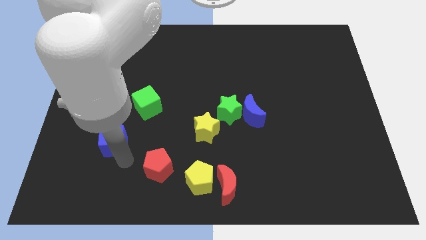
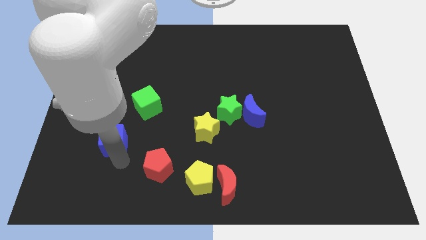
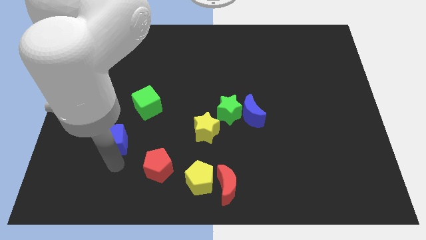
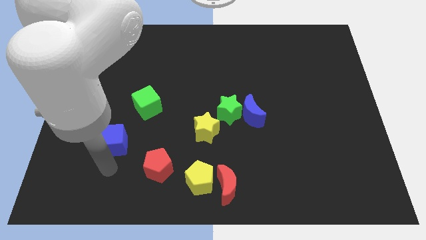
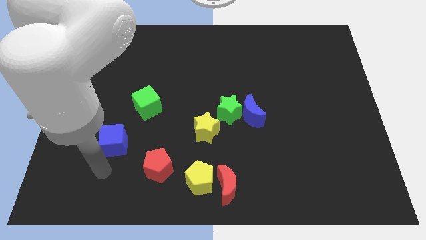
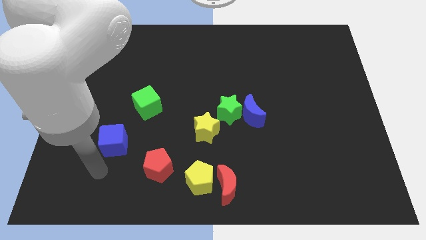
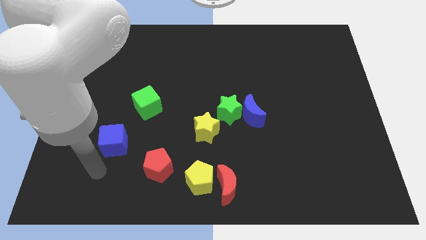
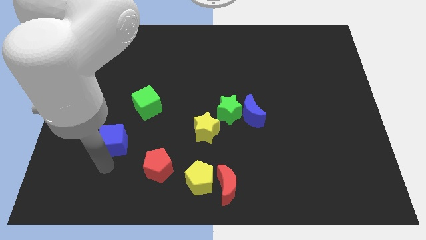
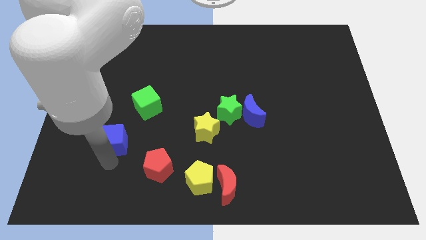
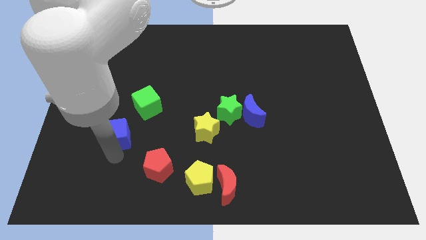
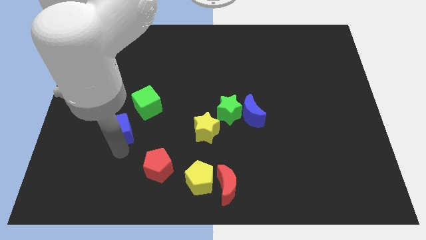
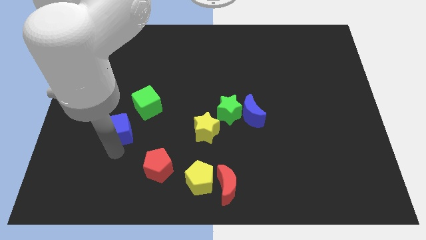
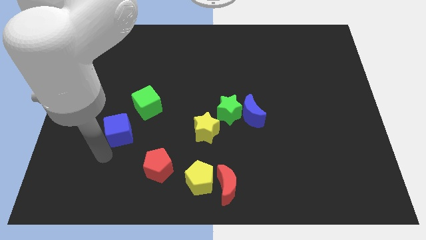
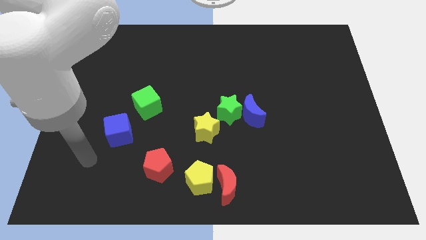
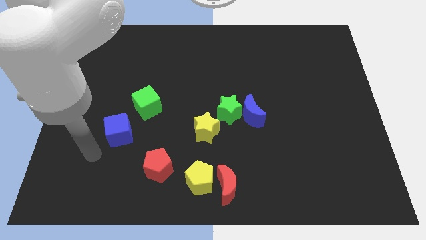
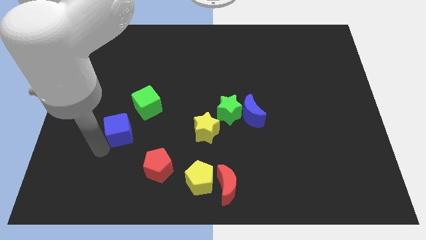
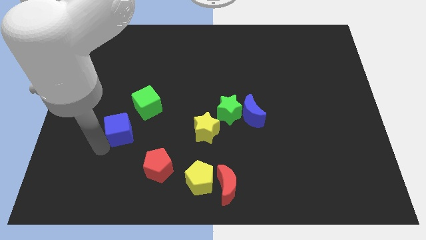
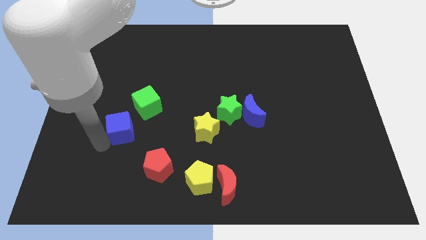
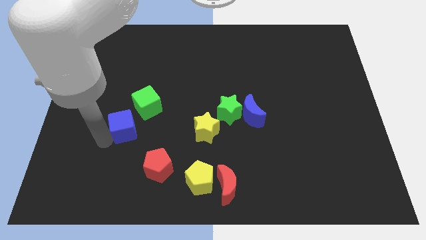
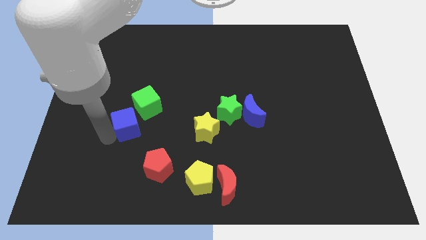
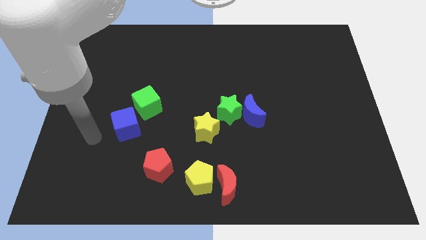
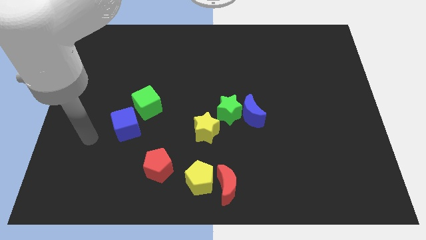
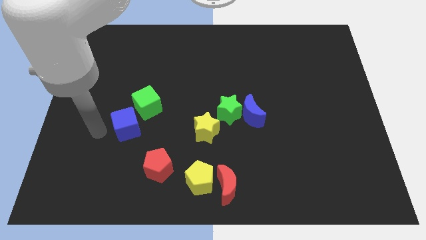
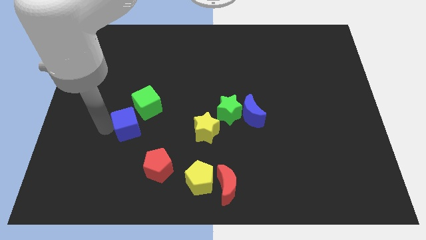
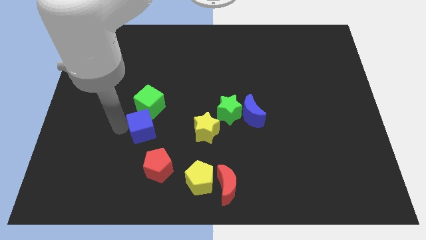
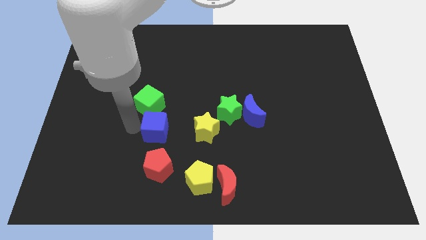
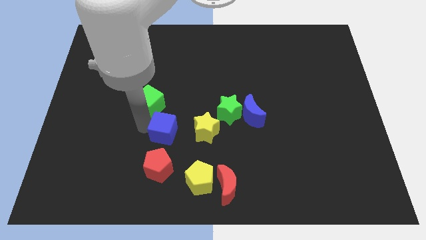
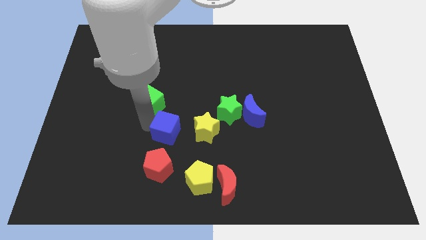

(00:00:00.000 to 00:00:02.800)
place the blue cube to the bottom right of the green cube

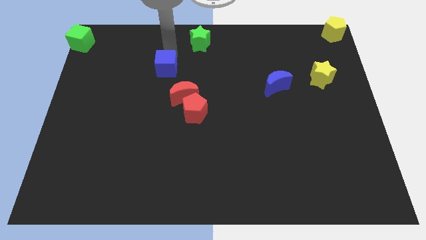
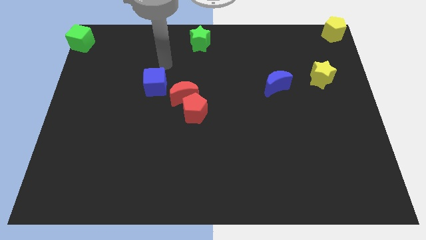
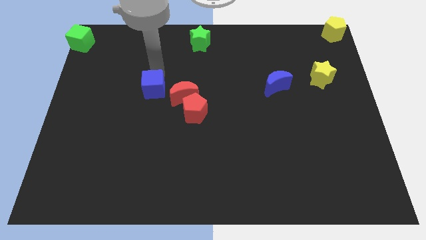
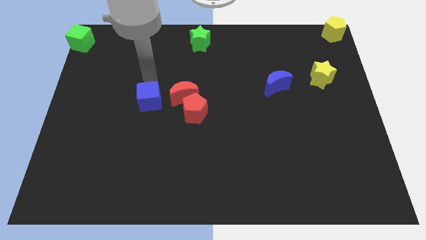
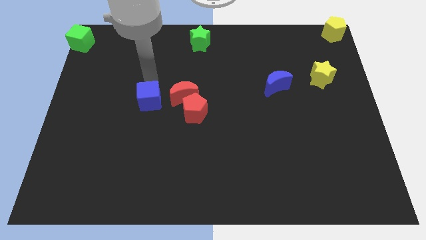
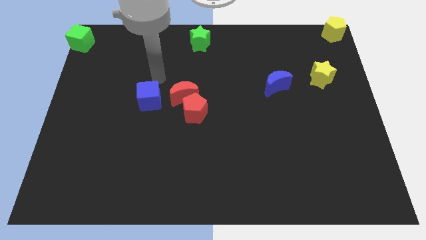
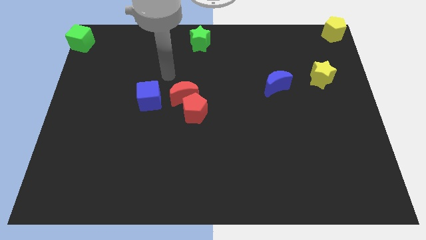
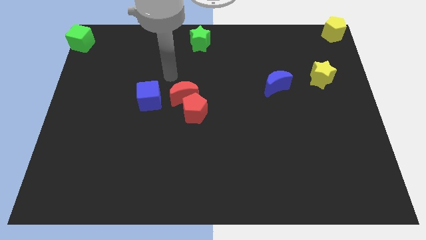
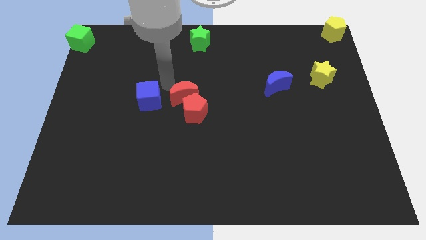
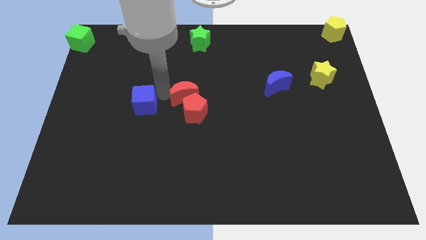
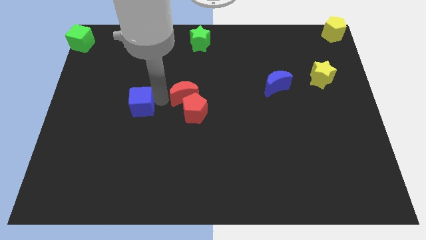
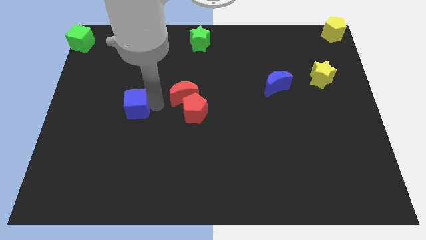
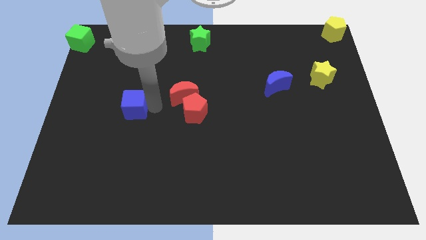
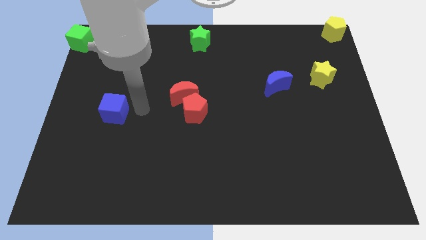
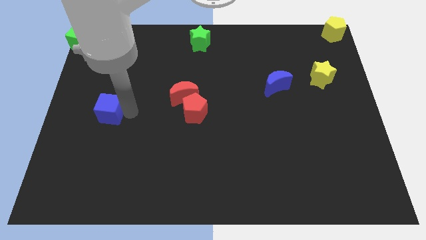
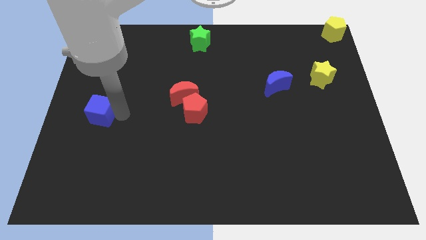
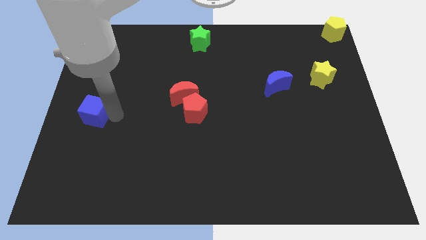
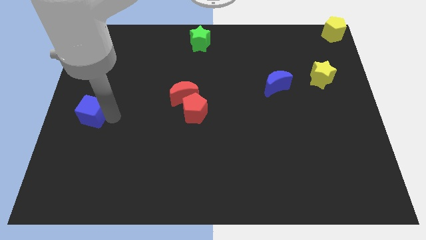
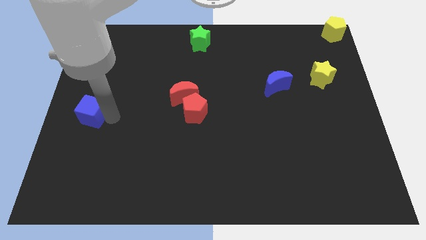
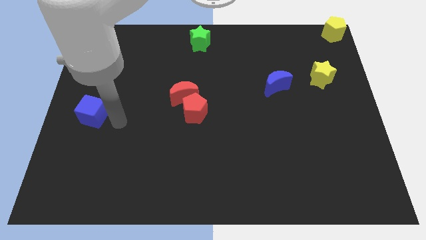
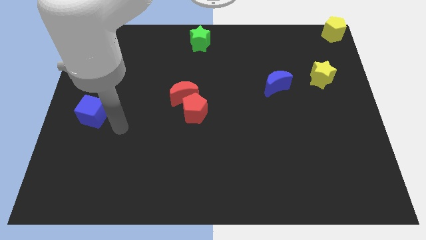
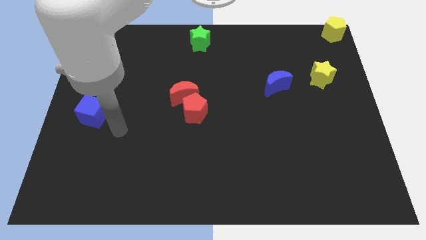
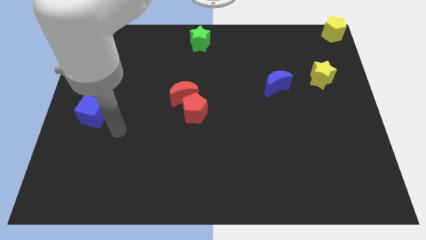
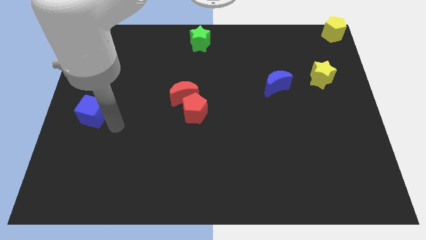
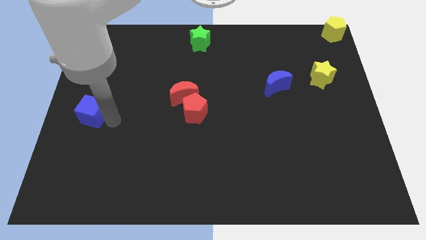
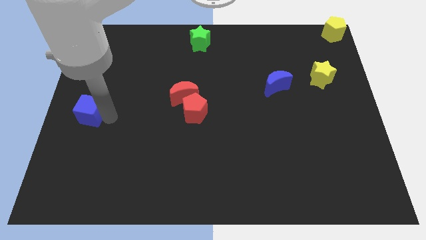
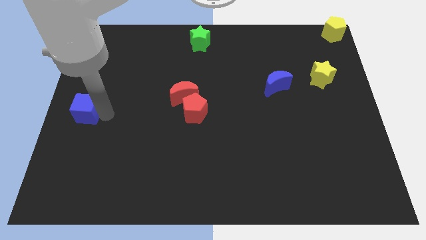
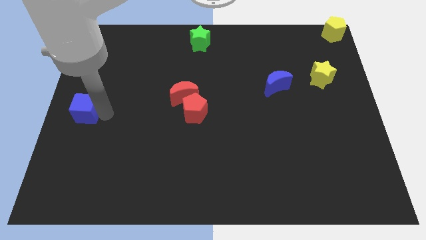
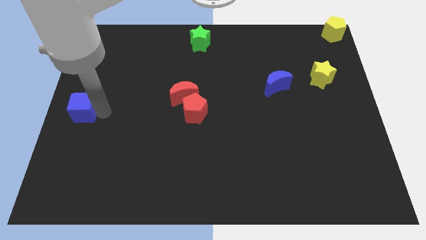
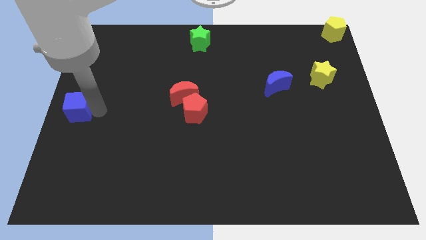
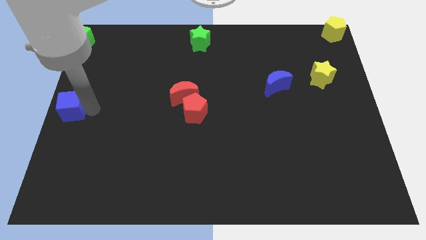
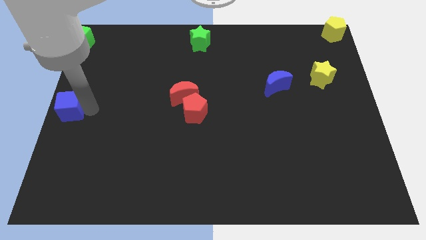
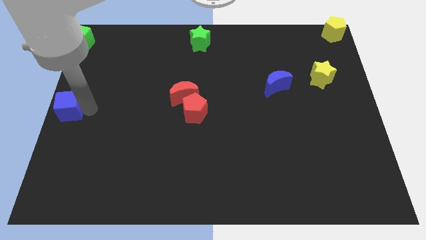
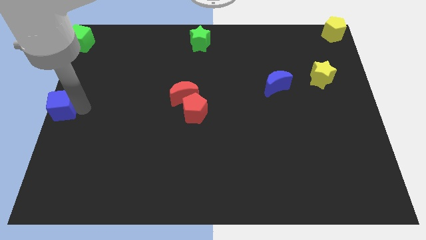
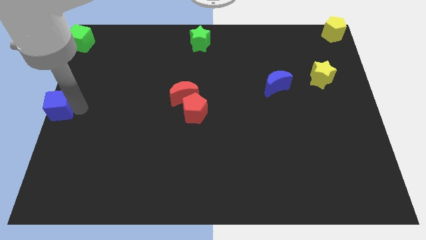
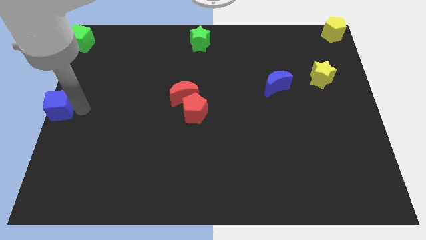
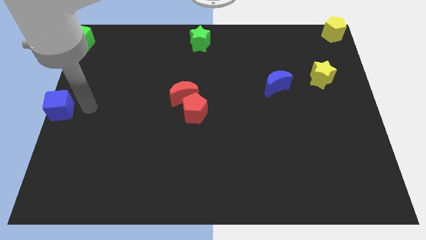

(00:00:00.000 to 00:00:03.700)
place the blue cube parallel to th red pentagon

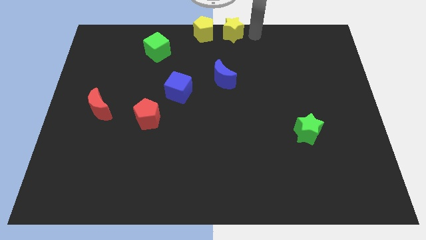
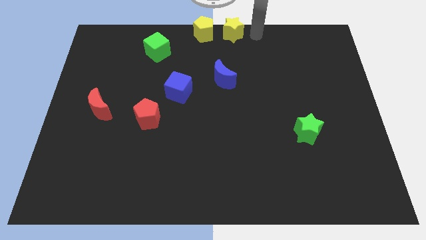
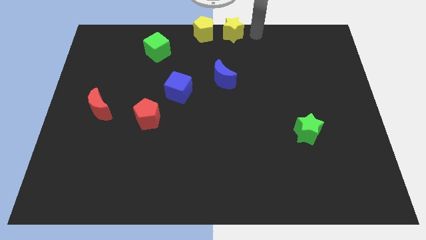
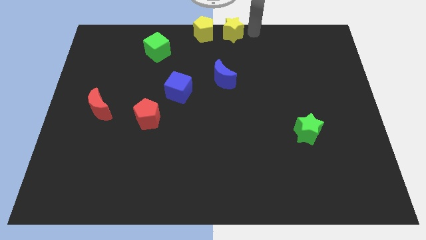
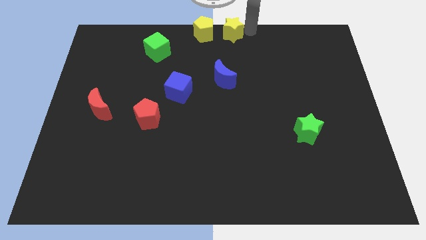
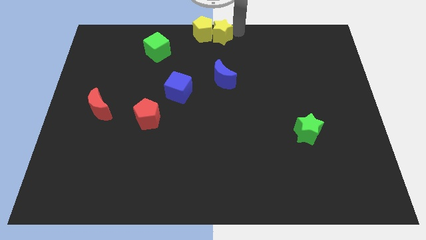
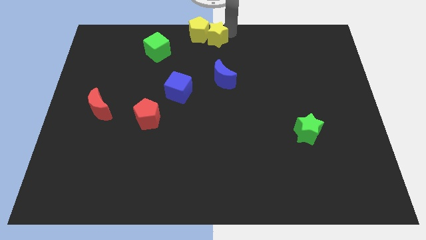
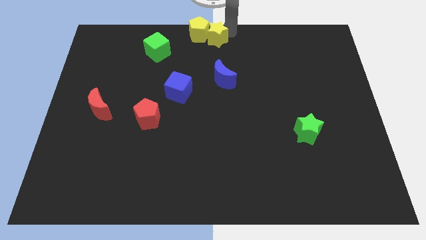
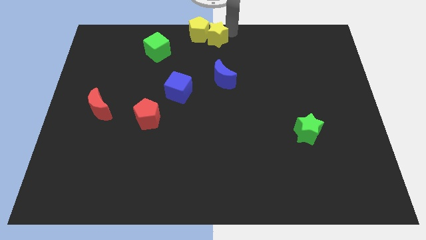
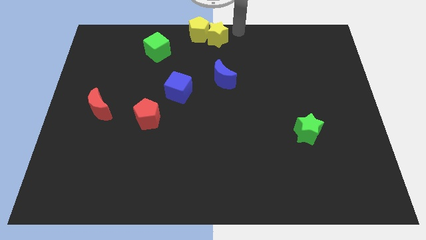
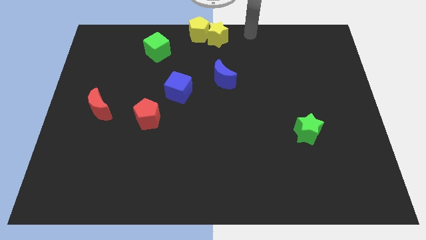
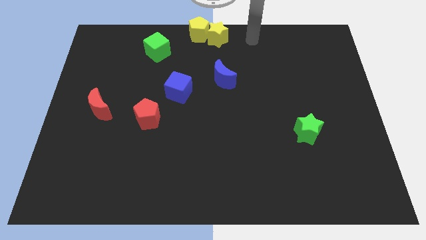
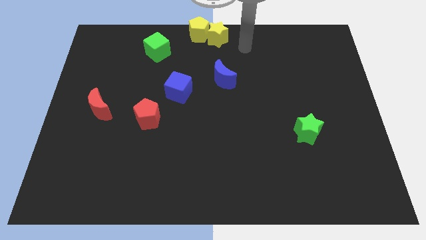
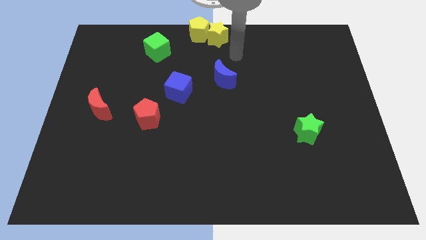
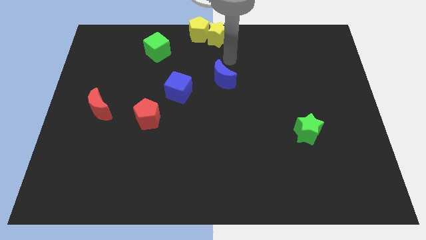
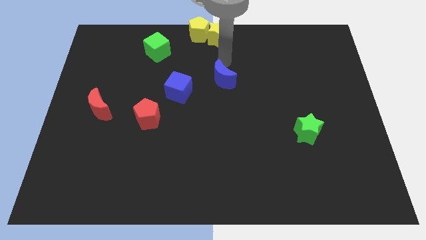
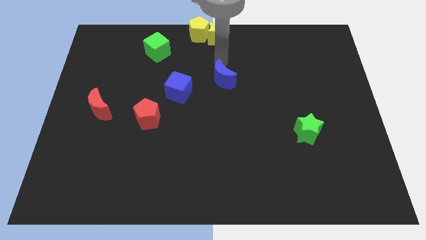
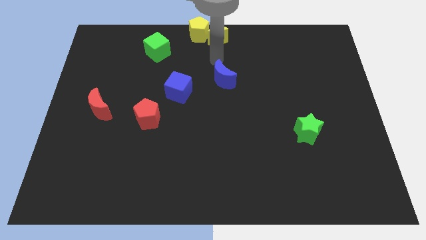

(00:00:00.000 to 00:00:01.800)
push the yellow star into the yellow pentagon

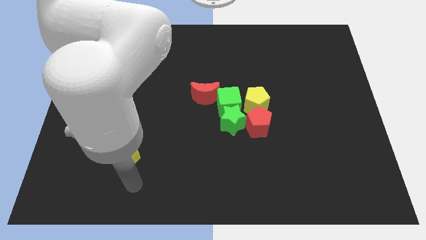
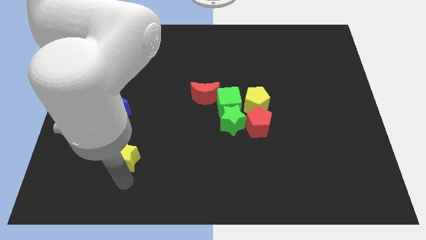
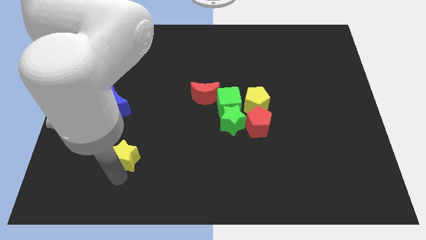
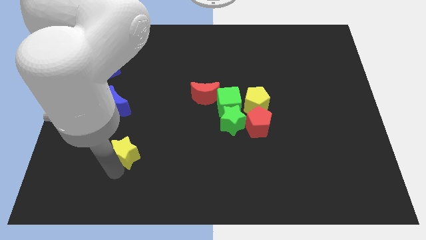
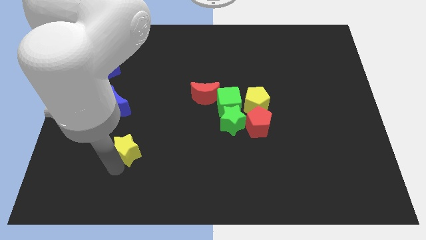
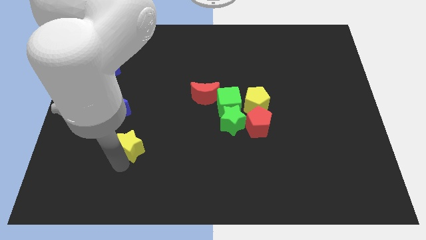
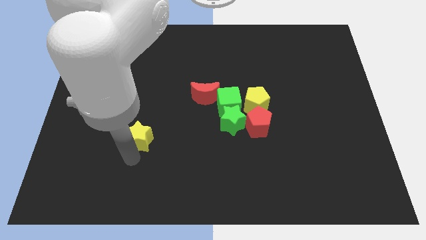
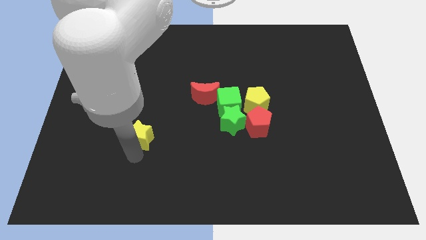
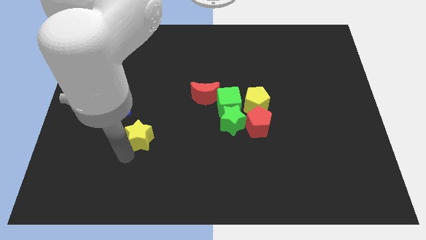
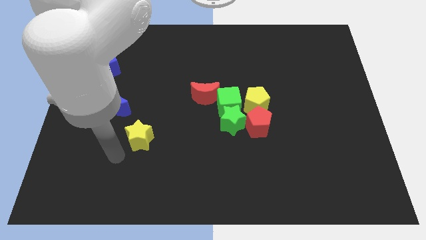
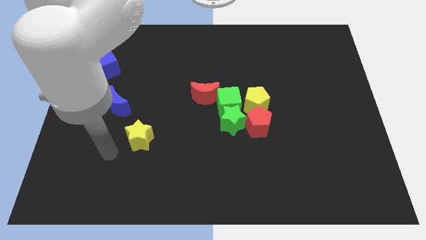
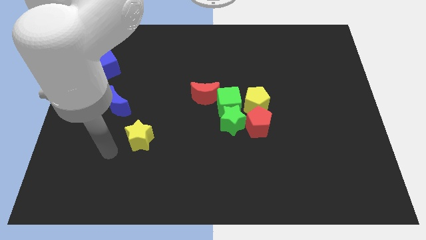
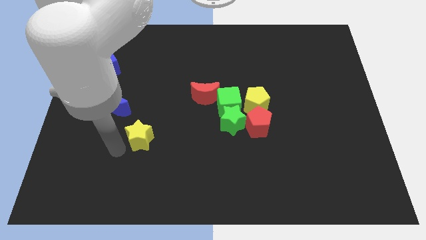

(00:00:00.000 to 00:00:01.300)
move the yellow star parallel below to the blue crescent
